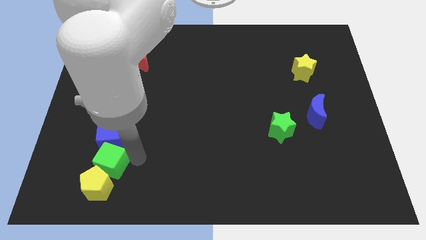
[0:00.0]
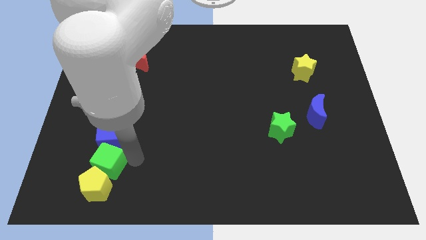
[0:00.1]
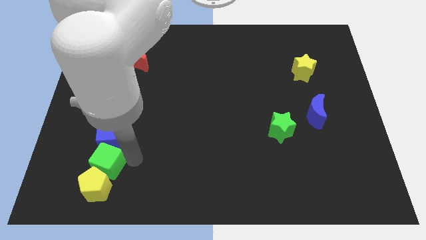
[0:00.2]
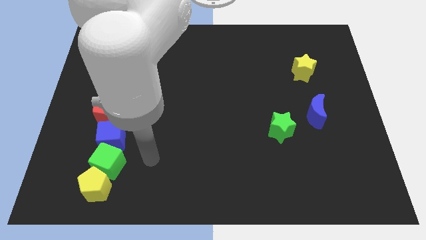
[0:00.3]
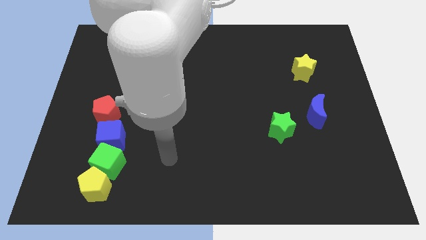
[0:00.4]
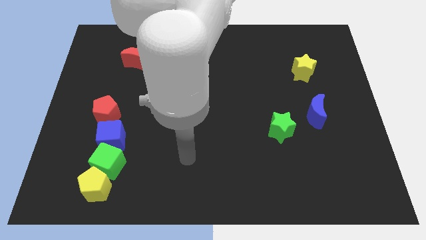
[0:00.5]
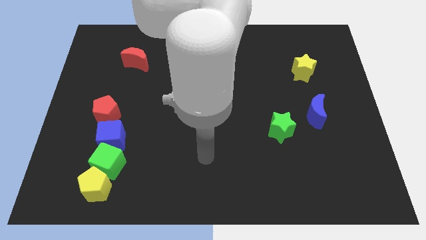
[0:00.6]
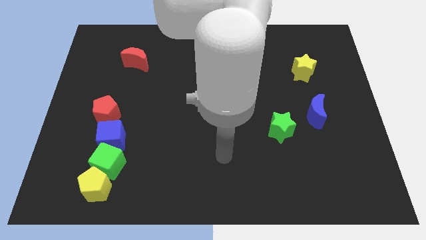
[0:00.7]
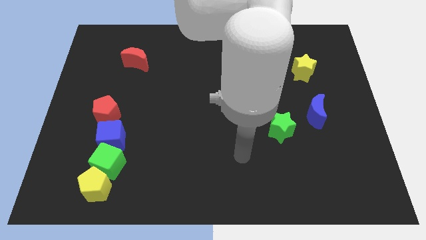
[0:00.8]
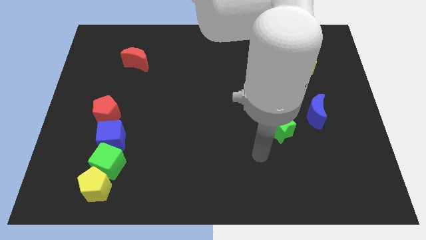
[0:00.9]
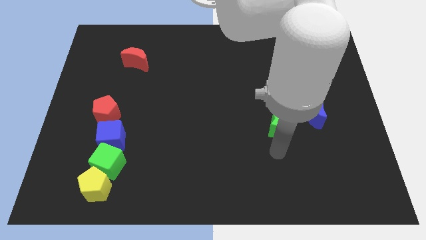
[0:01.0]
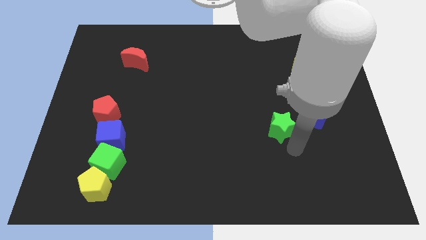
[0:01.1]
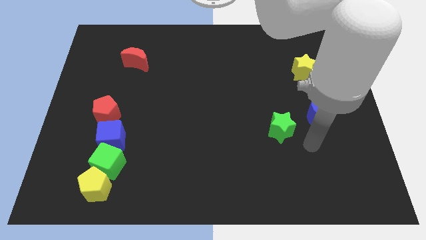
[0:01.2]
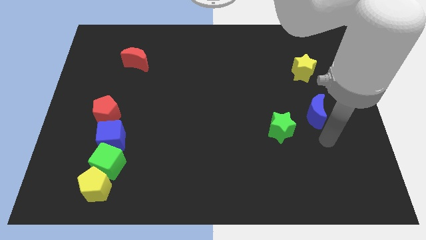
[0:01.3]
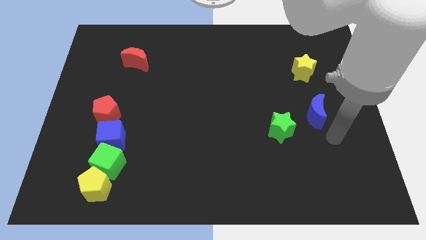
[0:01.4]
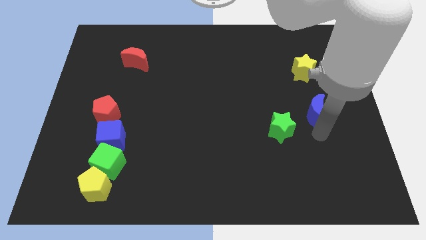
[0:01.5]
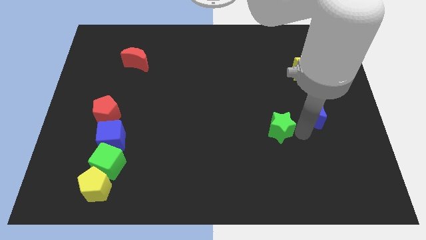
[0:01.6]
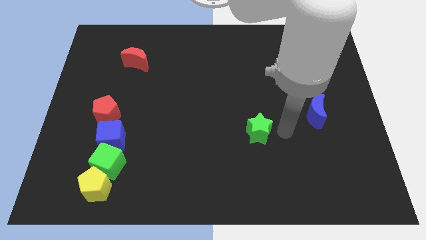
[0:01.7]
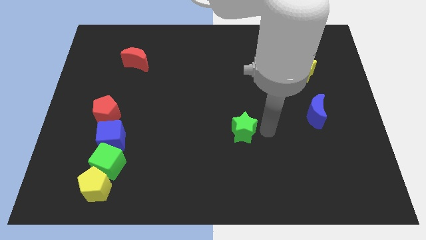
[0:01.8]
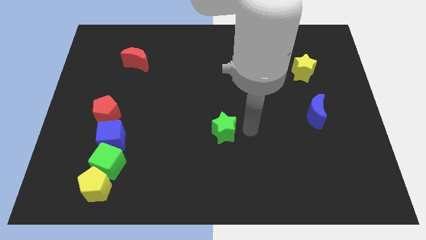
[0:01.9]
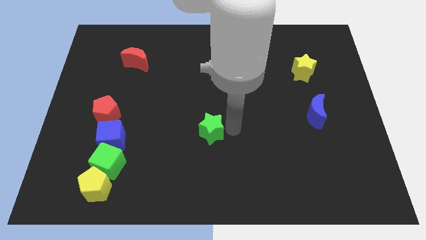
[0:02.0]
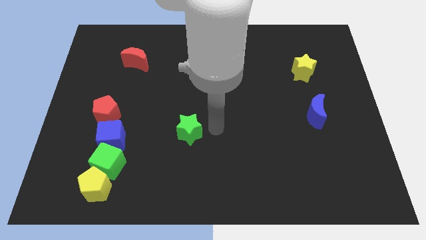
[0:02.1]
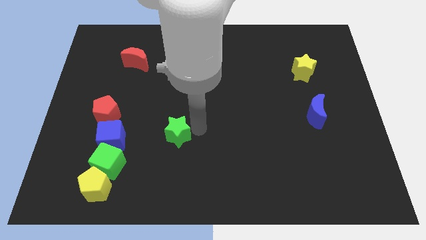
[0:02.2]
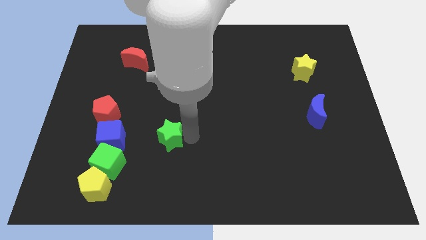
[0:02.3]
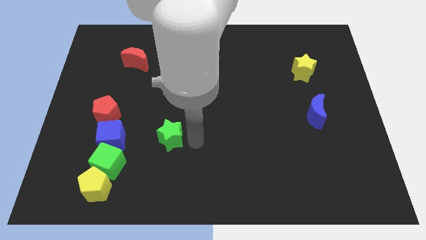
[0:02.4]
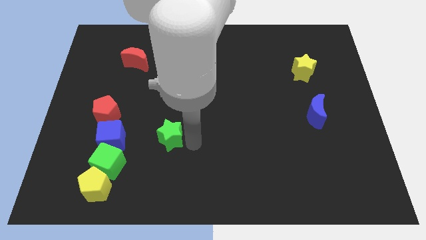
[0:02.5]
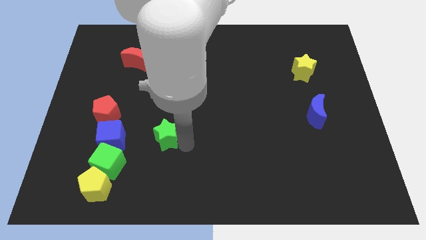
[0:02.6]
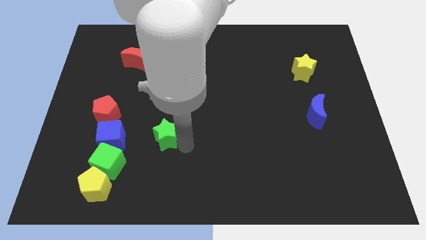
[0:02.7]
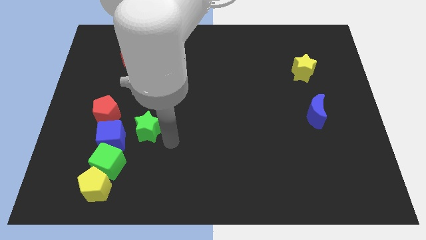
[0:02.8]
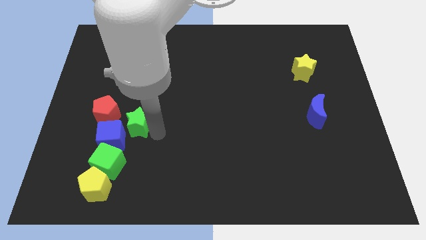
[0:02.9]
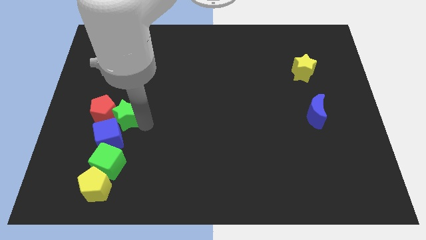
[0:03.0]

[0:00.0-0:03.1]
place green star on right side of red pentagon

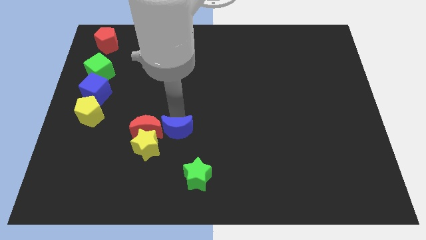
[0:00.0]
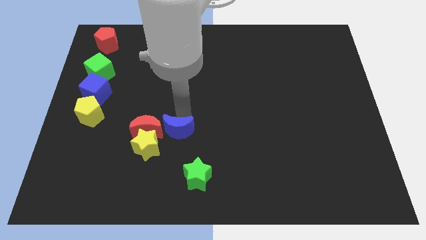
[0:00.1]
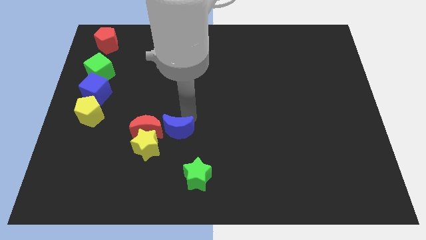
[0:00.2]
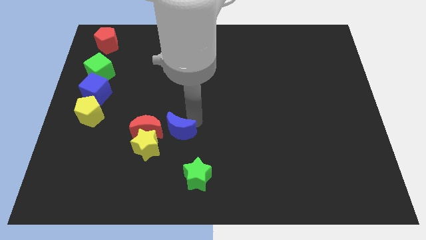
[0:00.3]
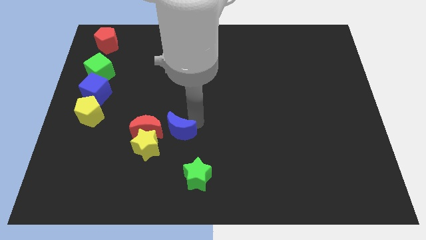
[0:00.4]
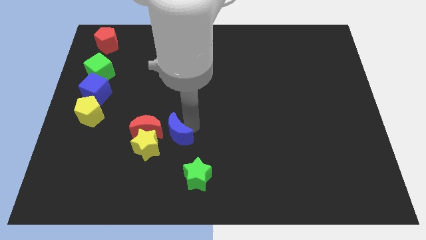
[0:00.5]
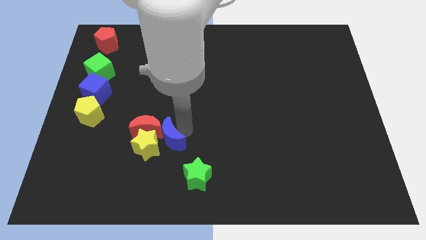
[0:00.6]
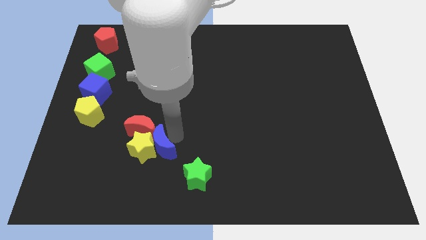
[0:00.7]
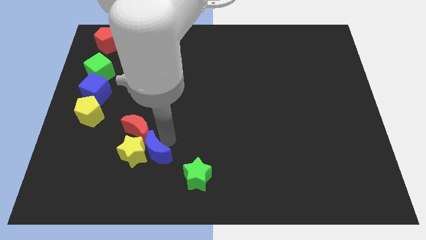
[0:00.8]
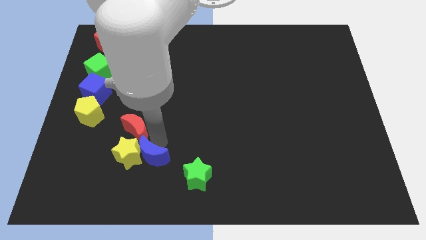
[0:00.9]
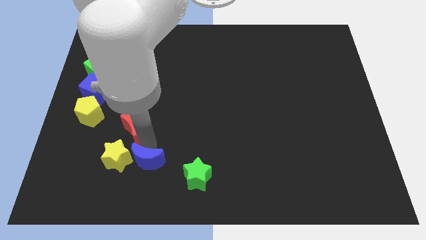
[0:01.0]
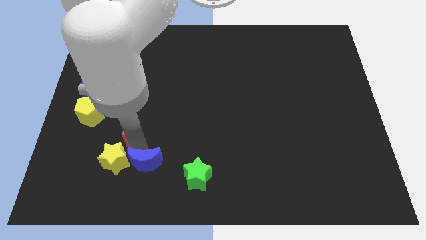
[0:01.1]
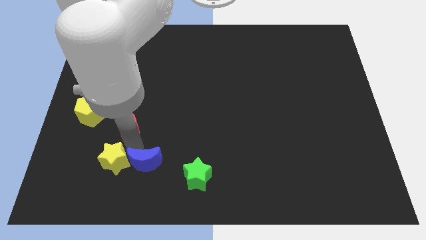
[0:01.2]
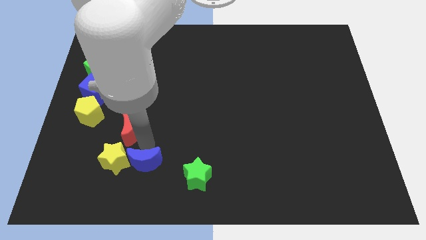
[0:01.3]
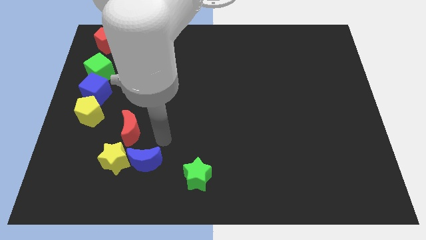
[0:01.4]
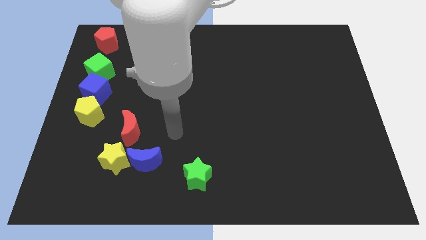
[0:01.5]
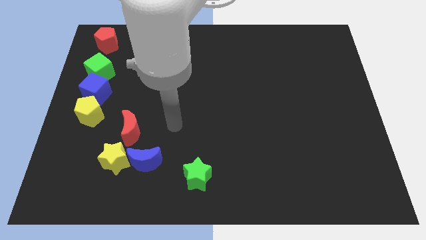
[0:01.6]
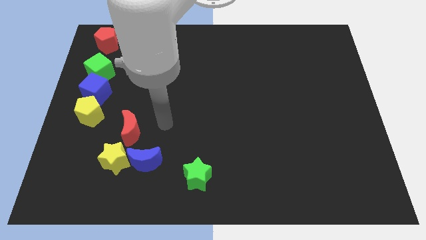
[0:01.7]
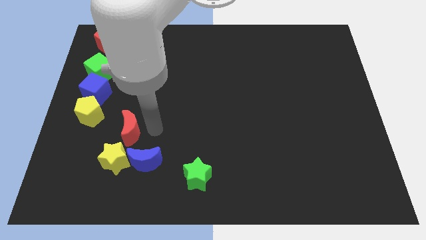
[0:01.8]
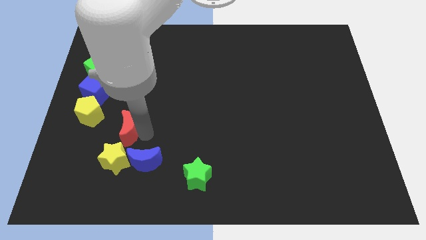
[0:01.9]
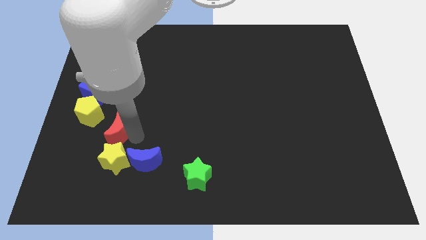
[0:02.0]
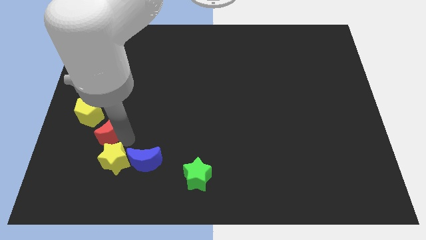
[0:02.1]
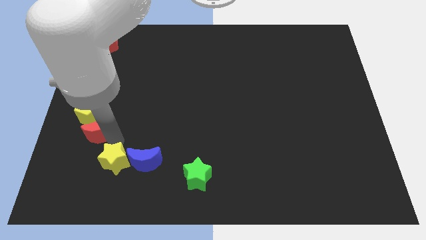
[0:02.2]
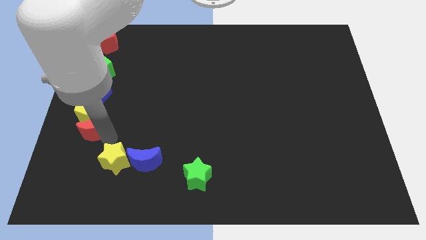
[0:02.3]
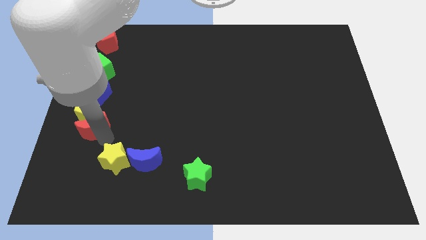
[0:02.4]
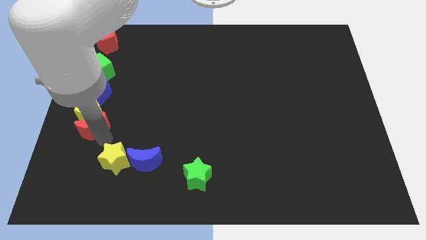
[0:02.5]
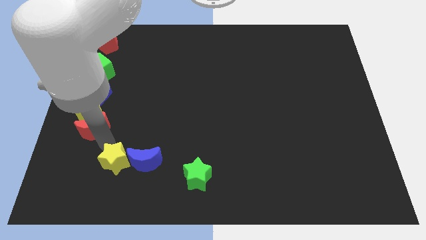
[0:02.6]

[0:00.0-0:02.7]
move the red crescent close to the bottom side of the yellow pentagon

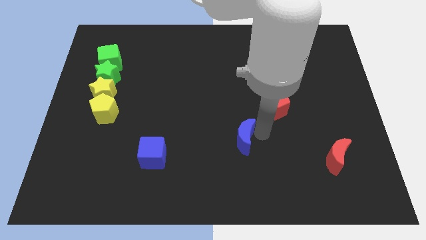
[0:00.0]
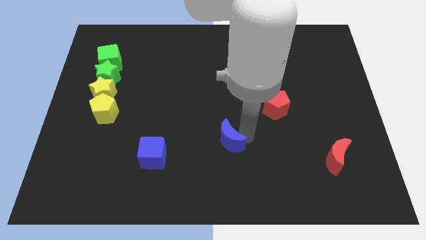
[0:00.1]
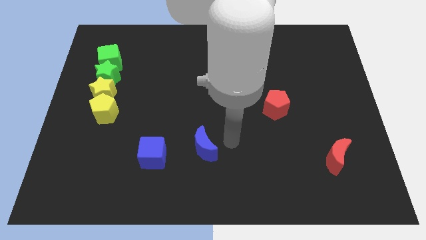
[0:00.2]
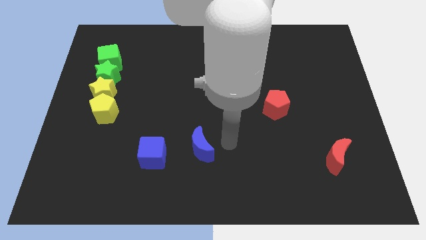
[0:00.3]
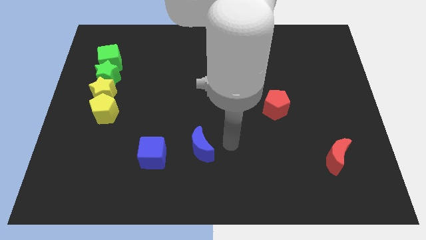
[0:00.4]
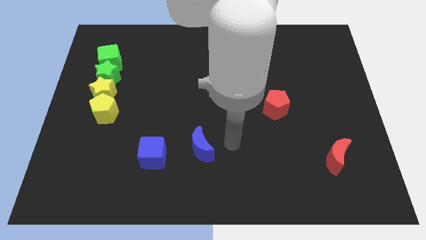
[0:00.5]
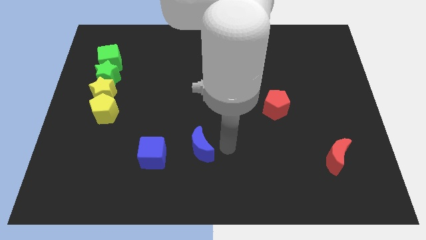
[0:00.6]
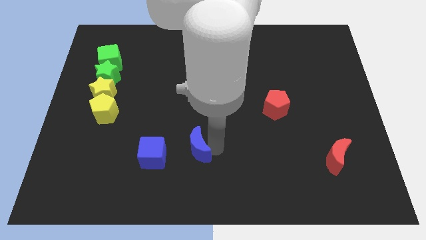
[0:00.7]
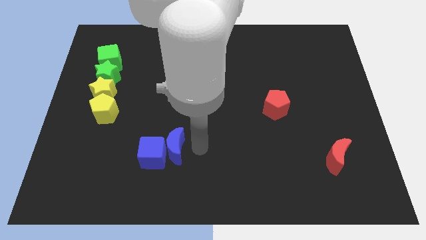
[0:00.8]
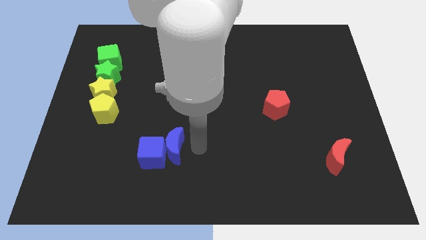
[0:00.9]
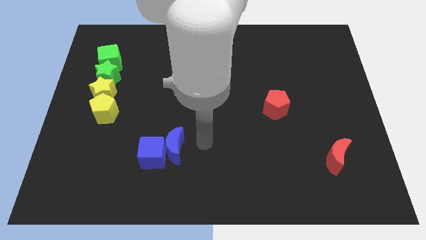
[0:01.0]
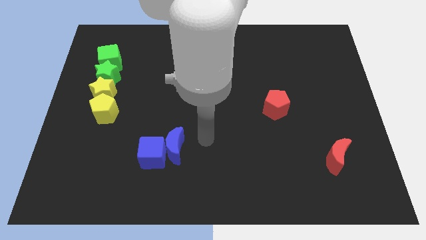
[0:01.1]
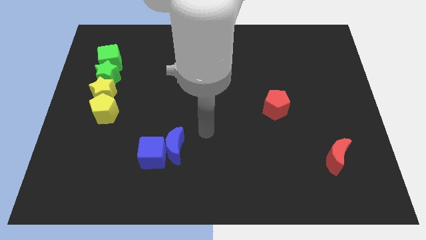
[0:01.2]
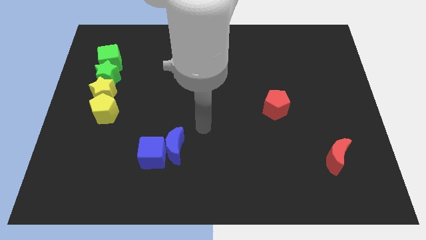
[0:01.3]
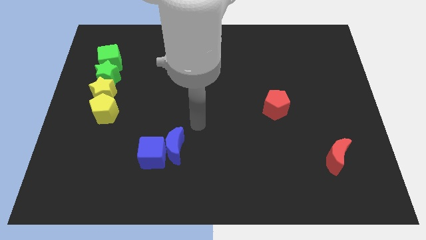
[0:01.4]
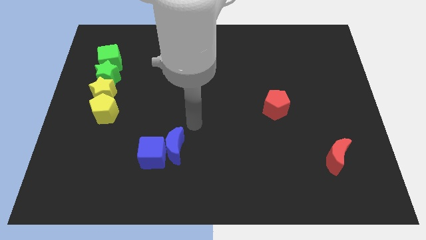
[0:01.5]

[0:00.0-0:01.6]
move the blue crescent to the right of the blue cube

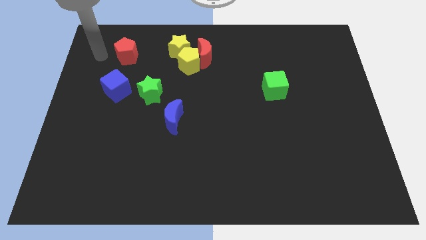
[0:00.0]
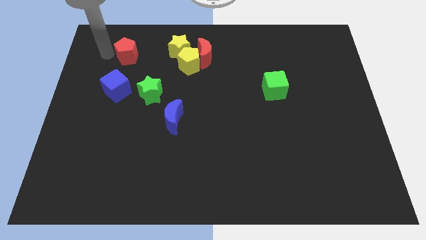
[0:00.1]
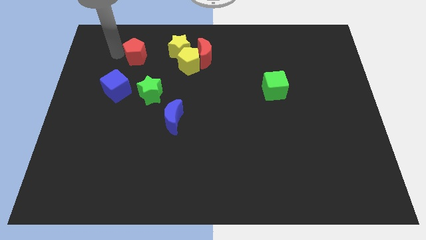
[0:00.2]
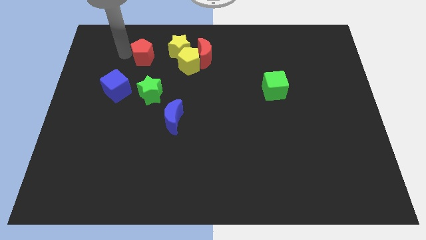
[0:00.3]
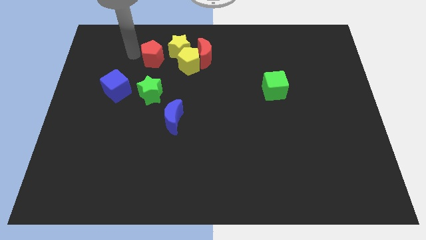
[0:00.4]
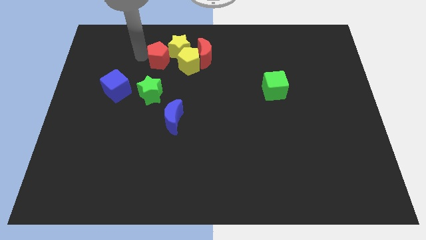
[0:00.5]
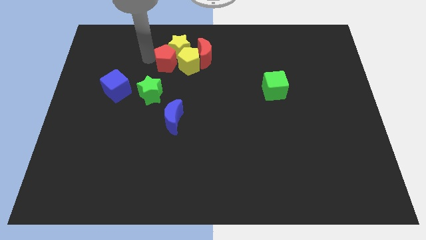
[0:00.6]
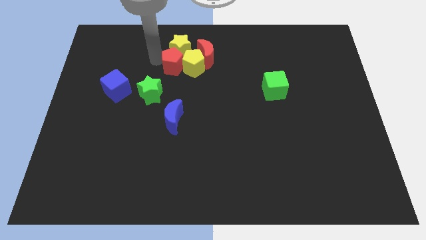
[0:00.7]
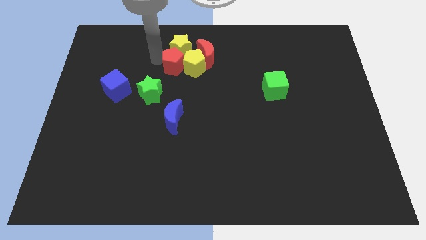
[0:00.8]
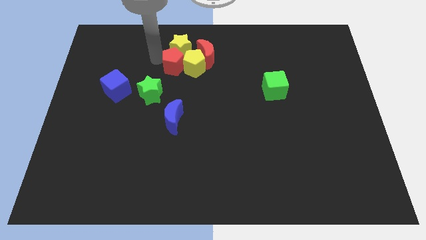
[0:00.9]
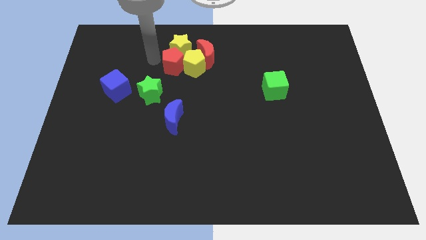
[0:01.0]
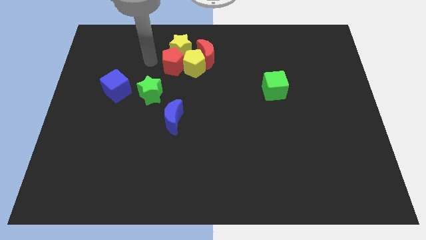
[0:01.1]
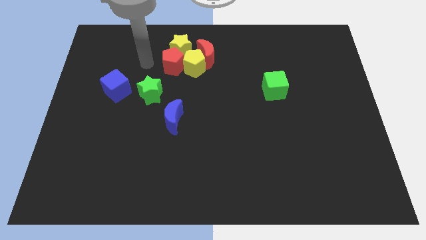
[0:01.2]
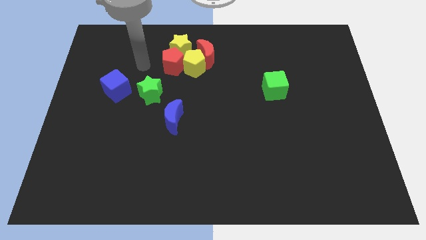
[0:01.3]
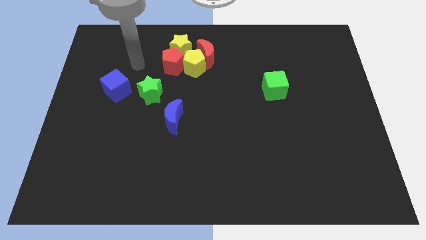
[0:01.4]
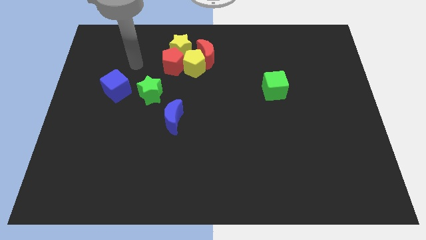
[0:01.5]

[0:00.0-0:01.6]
push the red pentagon left to the yellow pentagon
